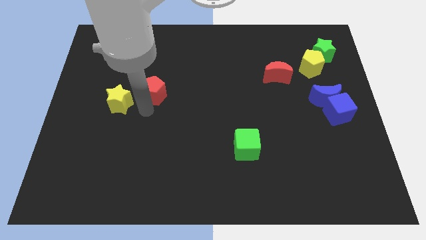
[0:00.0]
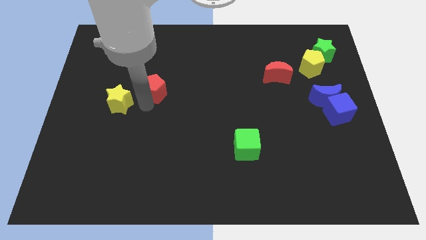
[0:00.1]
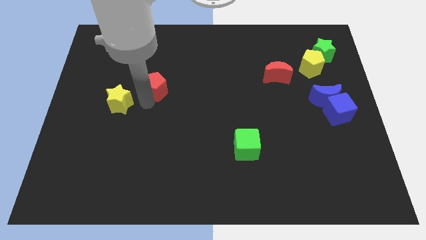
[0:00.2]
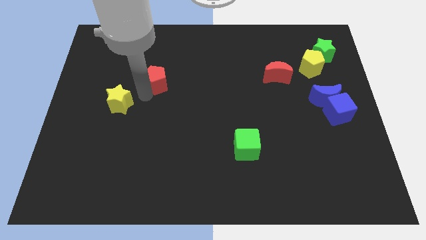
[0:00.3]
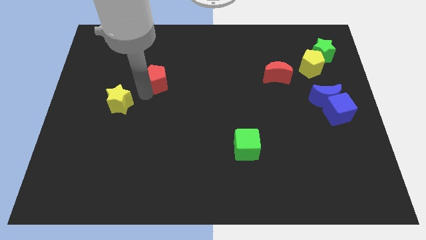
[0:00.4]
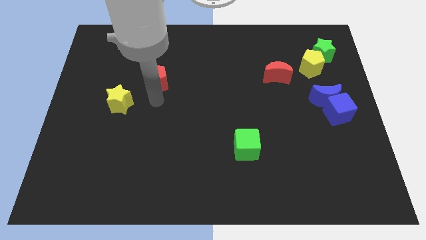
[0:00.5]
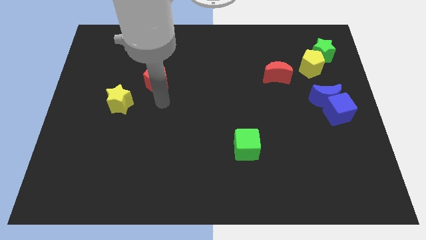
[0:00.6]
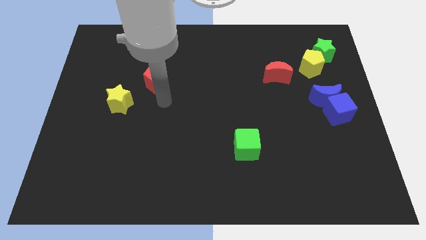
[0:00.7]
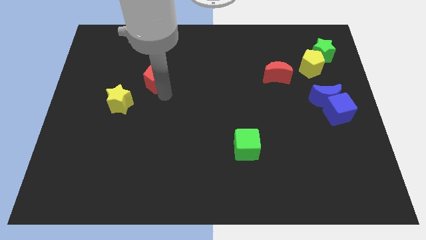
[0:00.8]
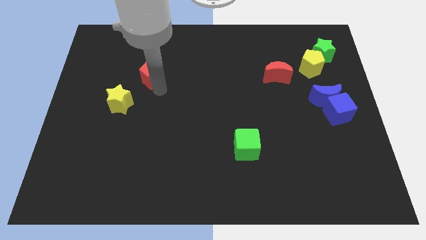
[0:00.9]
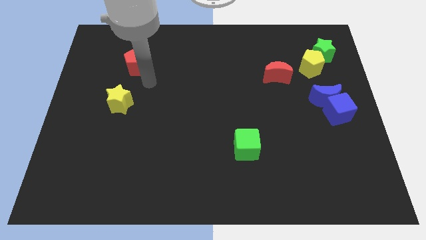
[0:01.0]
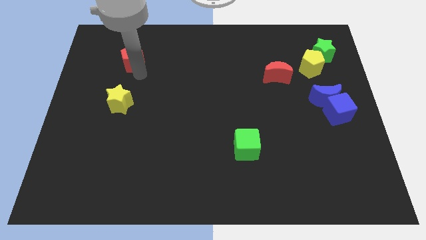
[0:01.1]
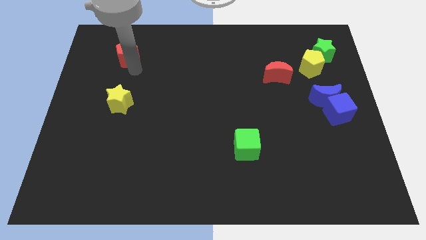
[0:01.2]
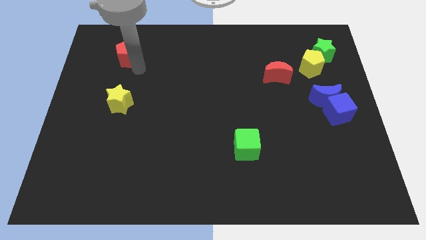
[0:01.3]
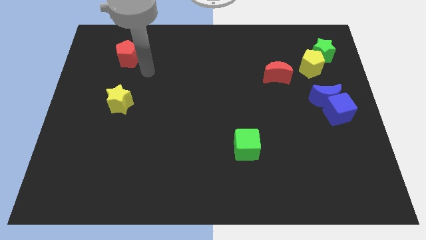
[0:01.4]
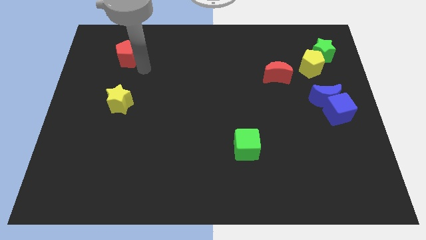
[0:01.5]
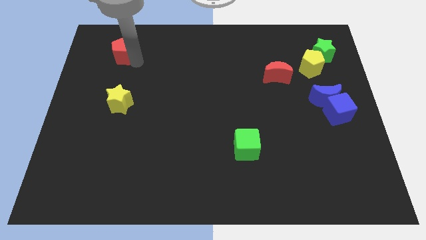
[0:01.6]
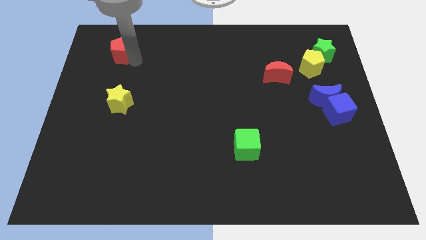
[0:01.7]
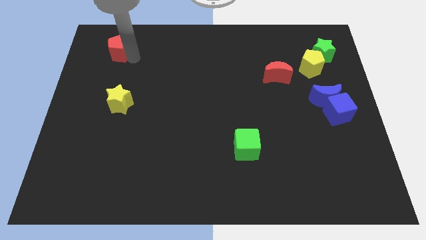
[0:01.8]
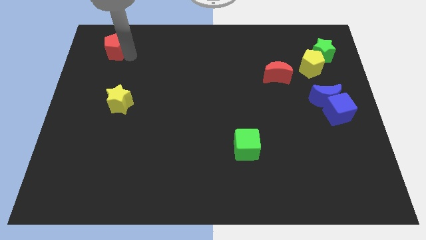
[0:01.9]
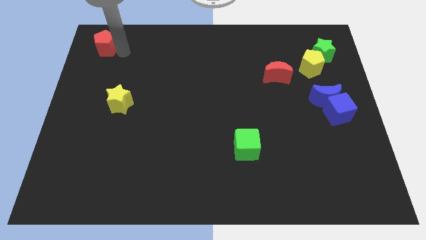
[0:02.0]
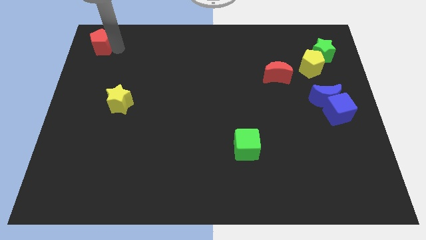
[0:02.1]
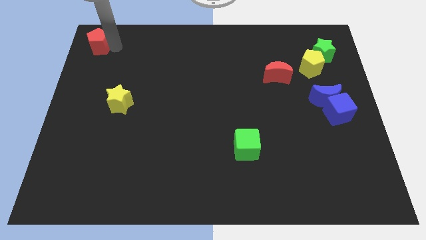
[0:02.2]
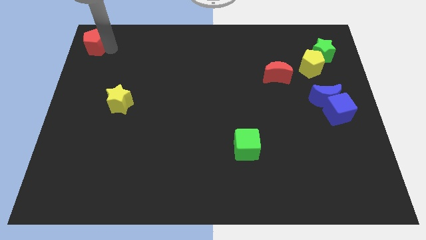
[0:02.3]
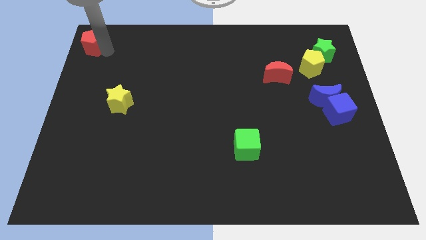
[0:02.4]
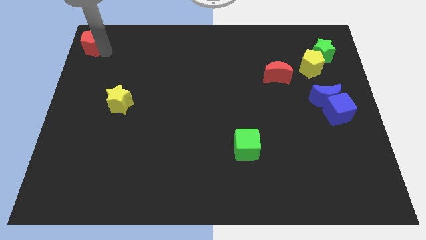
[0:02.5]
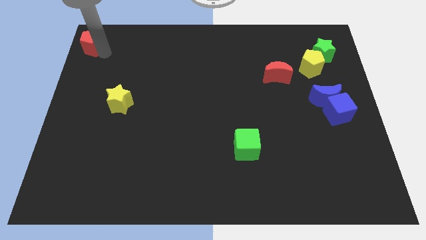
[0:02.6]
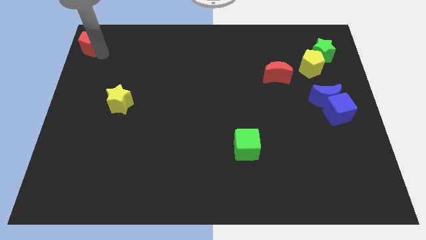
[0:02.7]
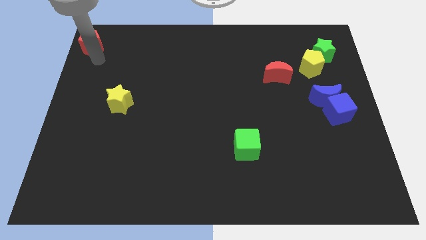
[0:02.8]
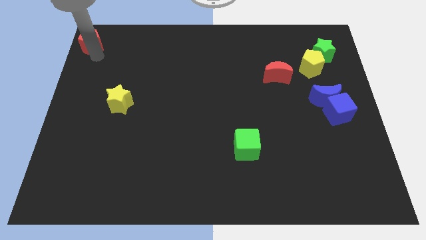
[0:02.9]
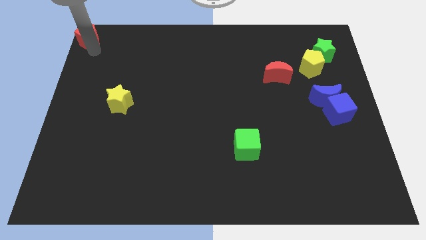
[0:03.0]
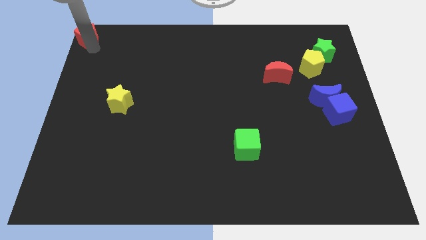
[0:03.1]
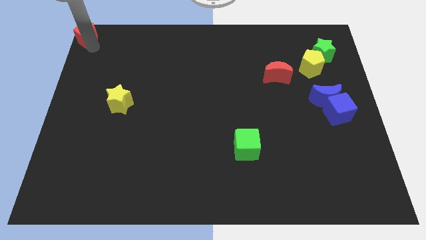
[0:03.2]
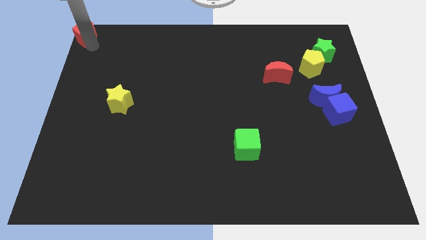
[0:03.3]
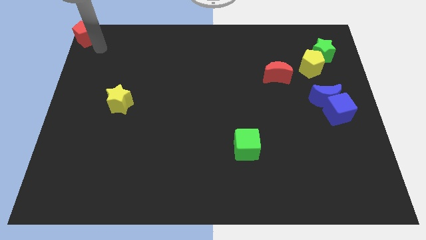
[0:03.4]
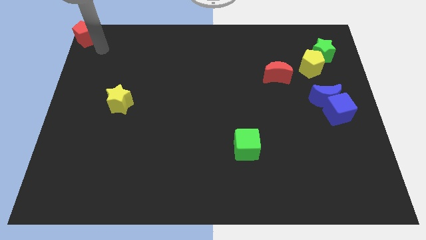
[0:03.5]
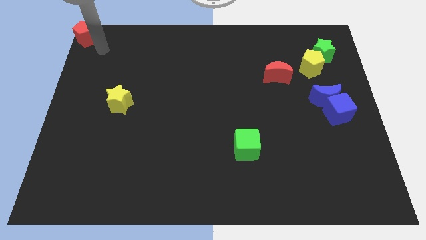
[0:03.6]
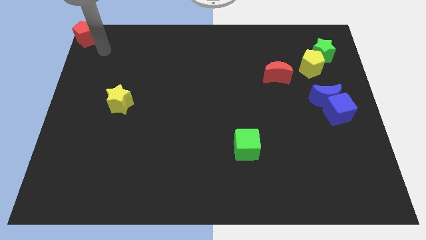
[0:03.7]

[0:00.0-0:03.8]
move red pentagon to the top left corner of the board

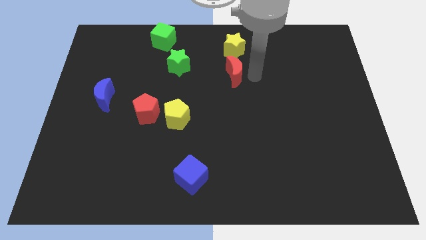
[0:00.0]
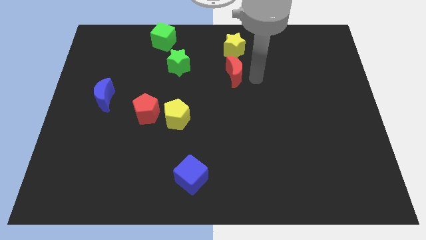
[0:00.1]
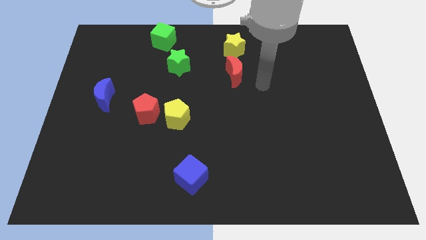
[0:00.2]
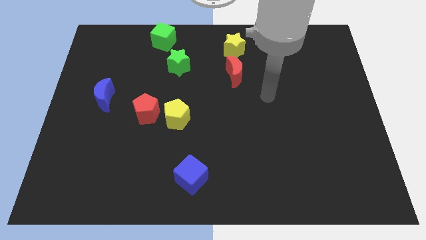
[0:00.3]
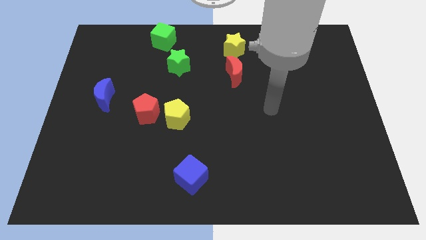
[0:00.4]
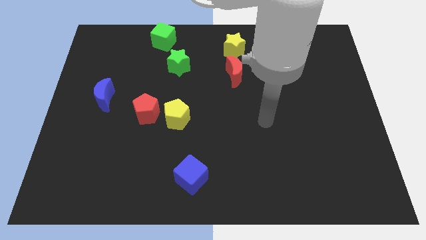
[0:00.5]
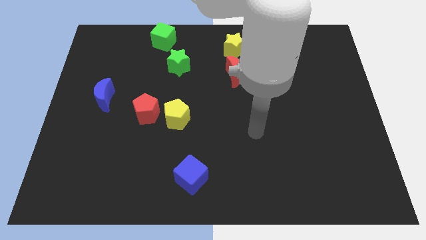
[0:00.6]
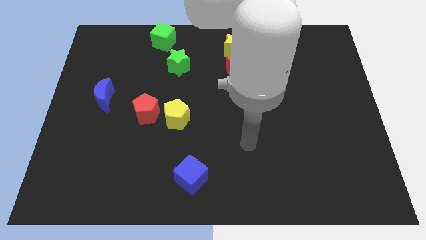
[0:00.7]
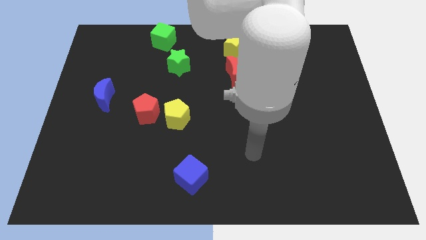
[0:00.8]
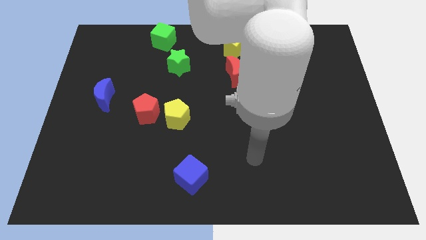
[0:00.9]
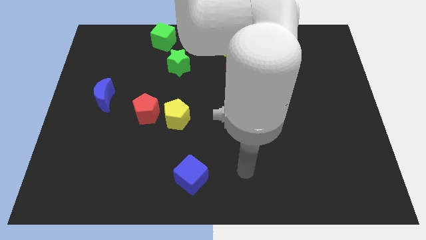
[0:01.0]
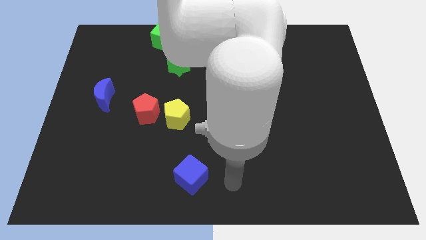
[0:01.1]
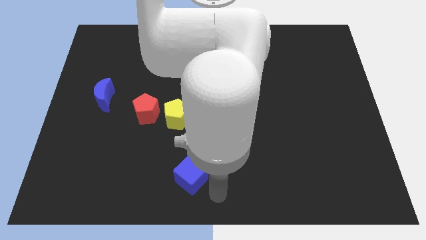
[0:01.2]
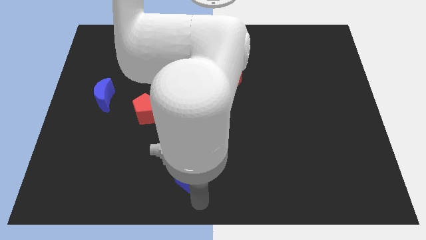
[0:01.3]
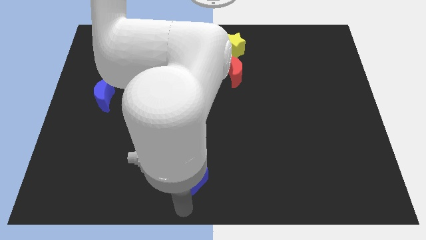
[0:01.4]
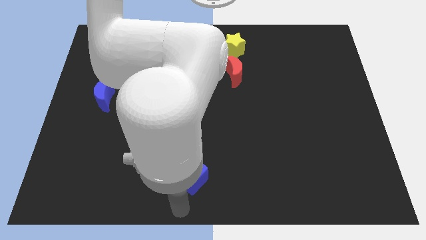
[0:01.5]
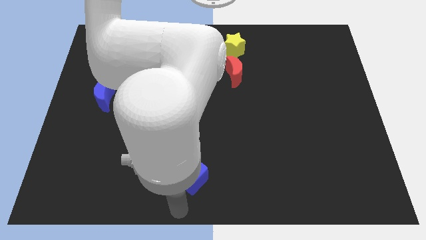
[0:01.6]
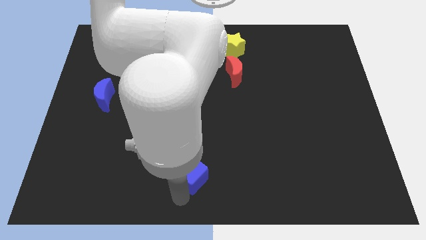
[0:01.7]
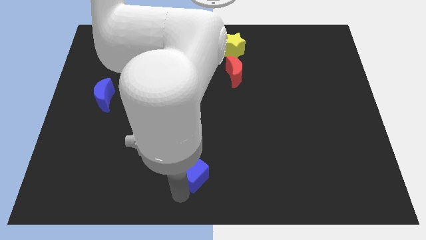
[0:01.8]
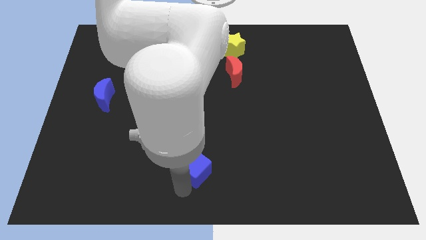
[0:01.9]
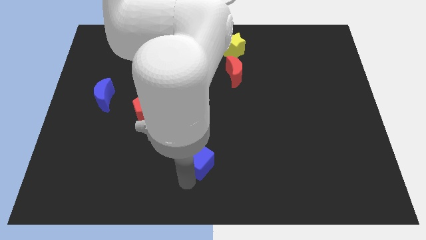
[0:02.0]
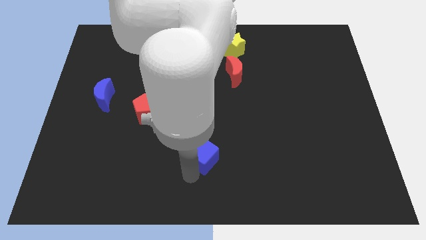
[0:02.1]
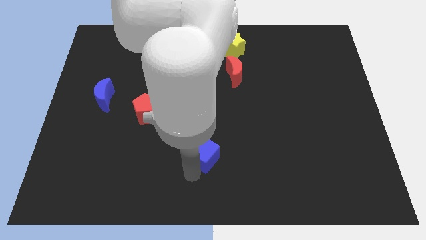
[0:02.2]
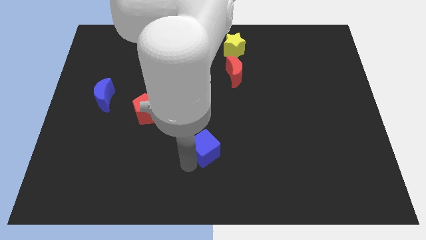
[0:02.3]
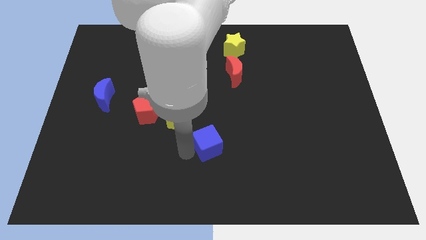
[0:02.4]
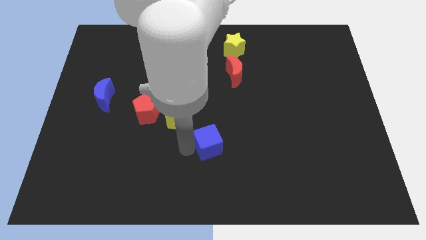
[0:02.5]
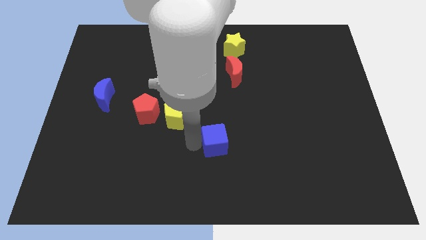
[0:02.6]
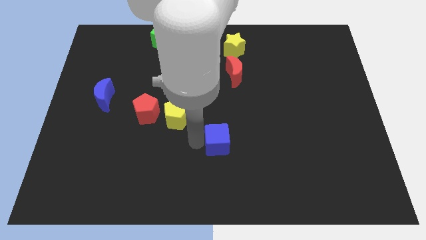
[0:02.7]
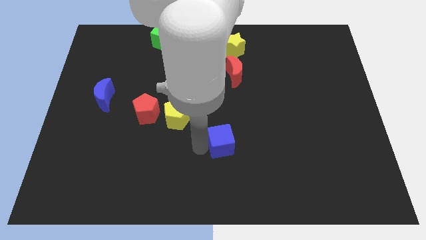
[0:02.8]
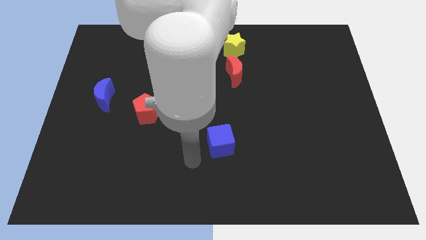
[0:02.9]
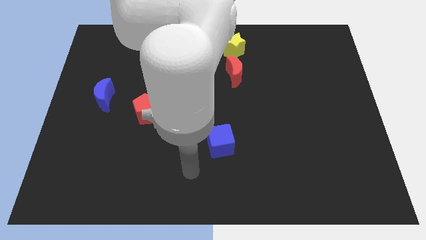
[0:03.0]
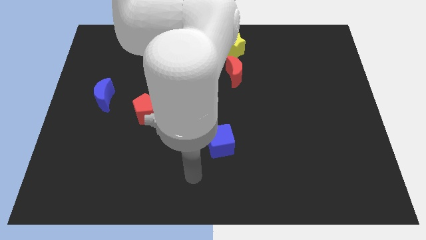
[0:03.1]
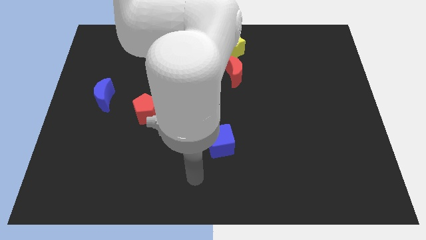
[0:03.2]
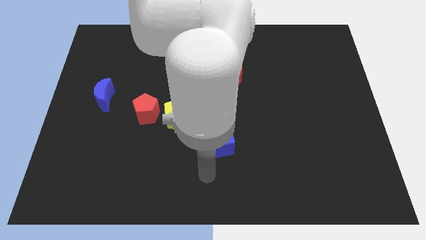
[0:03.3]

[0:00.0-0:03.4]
put the blue cube diagonally below the bottom right side of the yellow pentagon

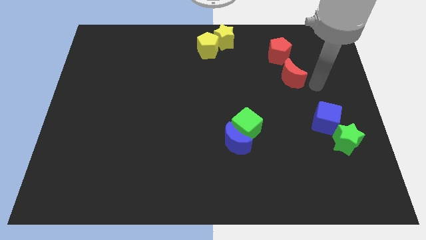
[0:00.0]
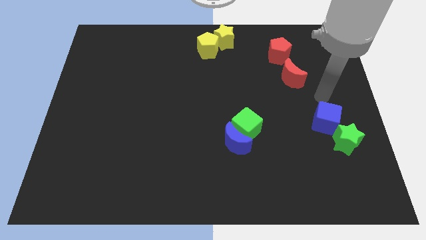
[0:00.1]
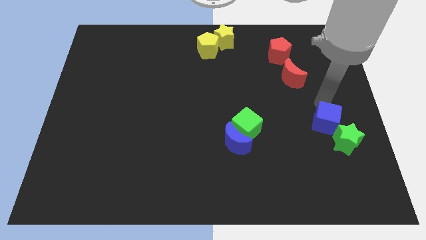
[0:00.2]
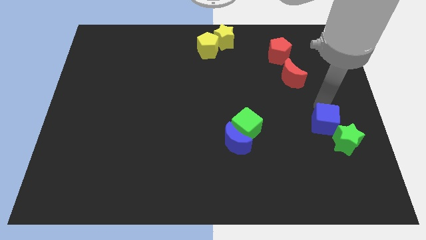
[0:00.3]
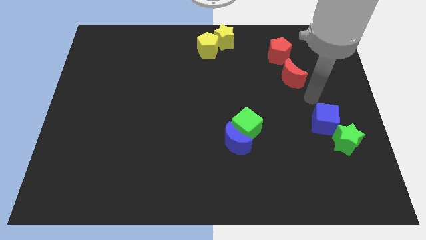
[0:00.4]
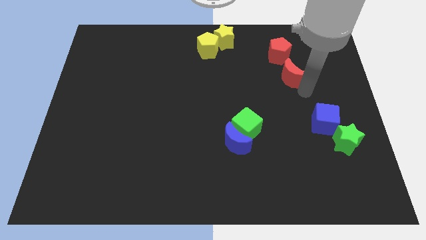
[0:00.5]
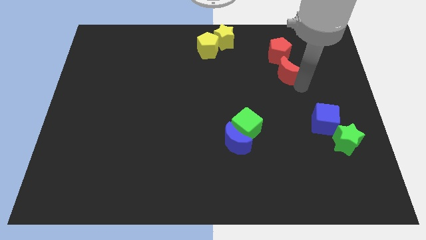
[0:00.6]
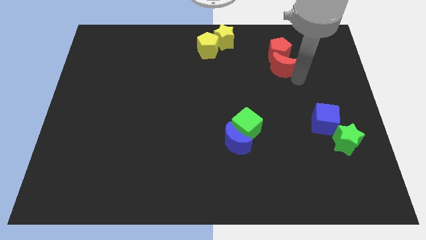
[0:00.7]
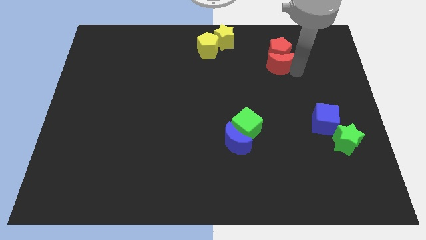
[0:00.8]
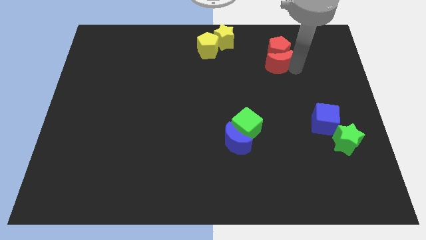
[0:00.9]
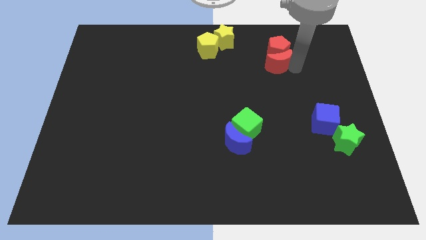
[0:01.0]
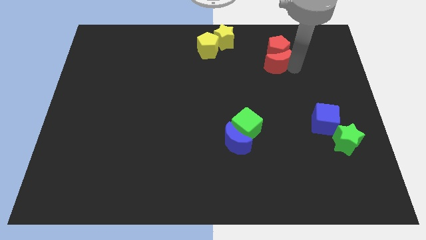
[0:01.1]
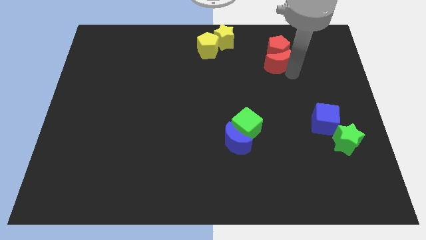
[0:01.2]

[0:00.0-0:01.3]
push the red crescent towards the red pentagon

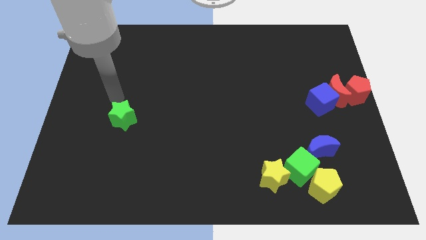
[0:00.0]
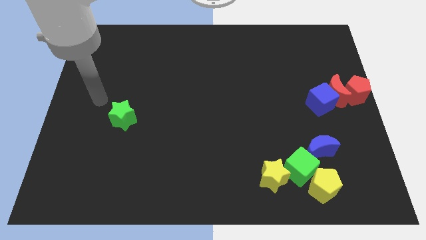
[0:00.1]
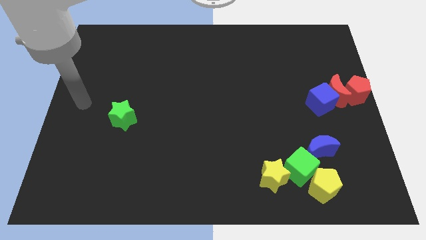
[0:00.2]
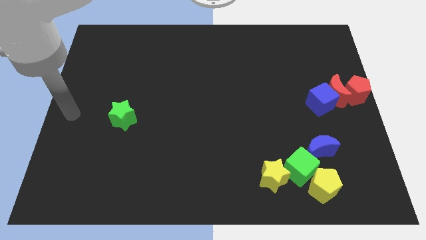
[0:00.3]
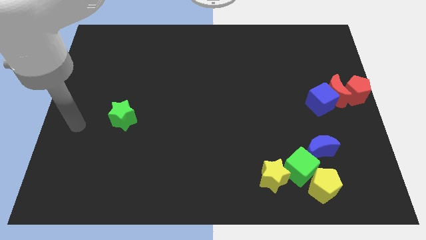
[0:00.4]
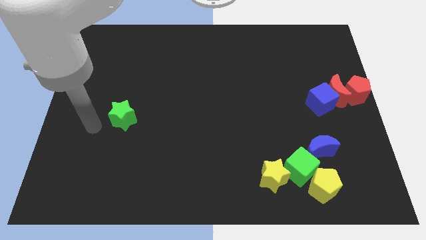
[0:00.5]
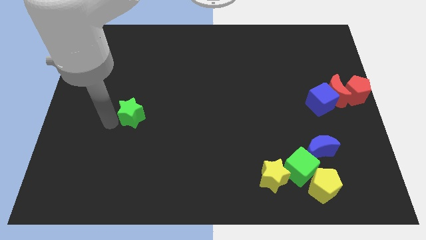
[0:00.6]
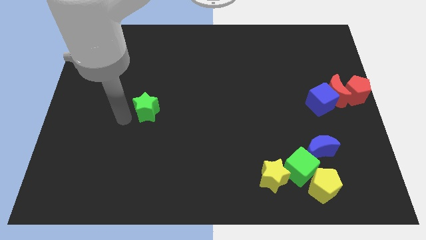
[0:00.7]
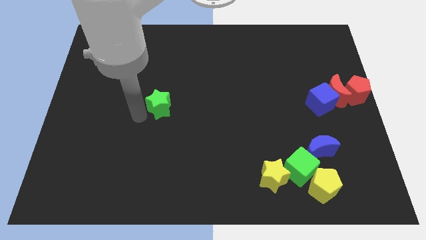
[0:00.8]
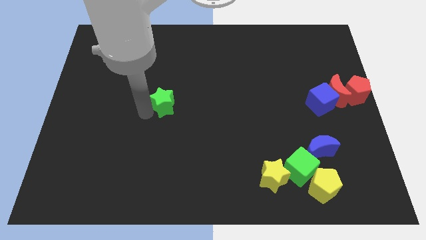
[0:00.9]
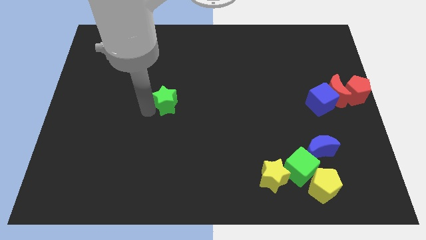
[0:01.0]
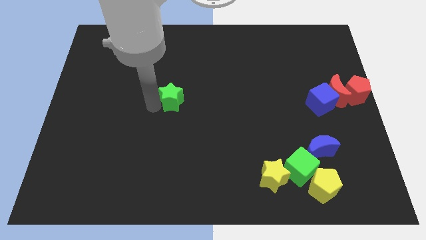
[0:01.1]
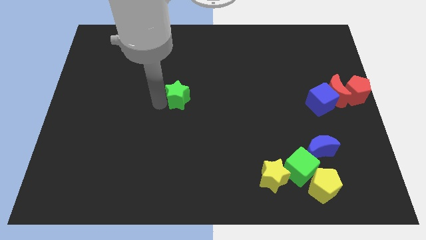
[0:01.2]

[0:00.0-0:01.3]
push the green star slightly to the right
